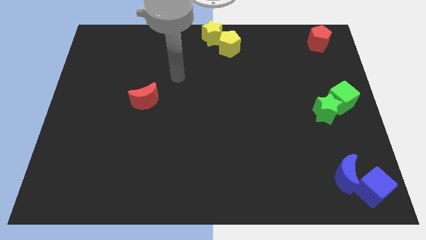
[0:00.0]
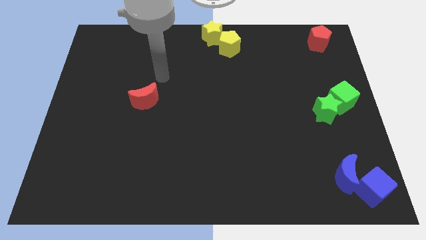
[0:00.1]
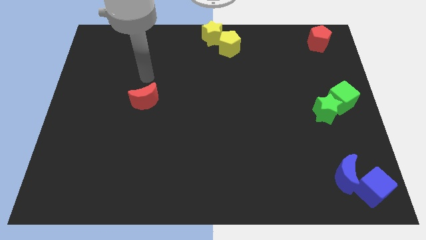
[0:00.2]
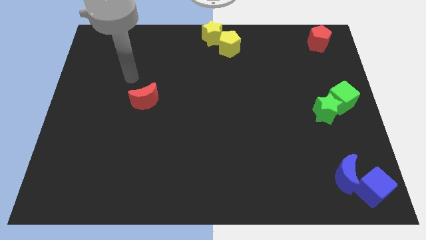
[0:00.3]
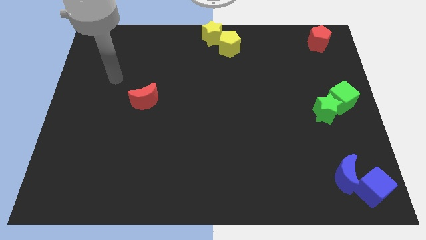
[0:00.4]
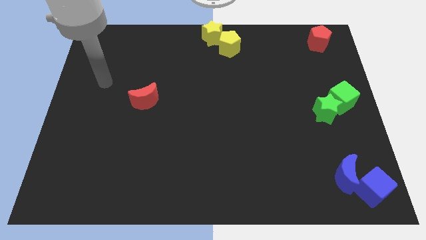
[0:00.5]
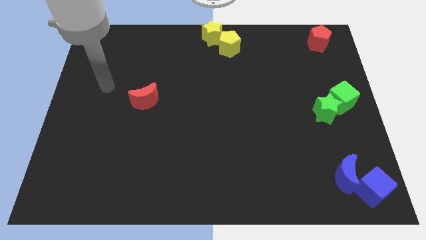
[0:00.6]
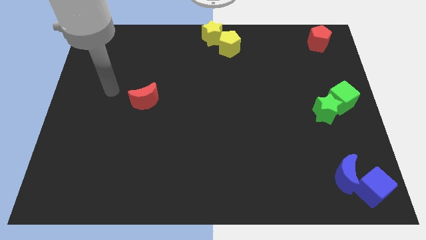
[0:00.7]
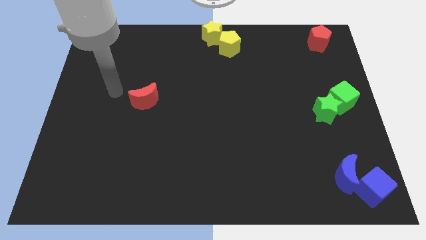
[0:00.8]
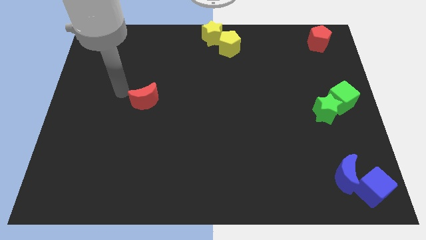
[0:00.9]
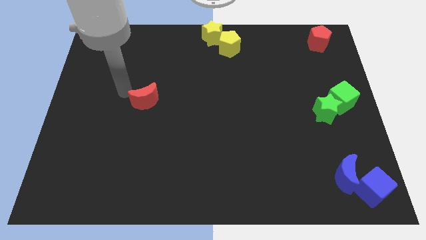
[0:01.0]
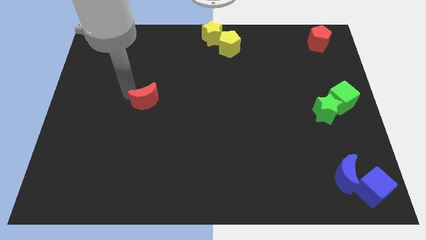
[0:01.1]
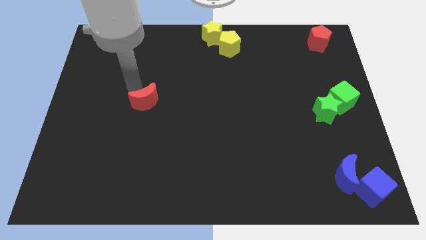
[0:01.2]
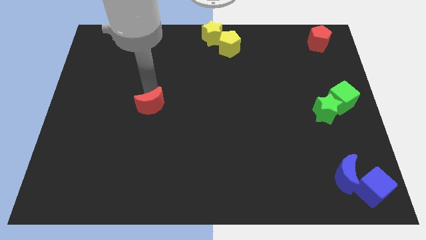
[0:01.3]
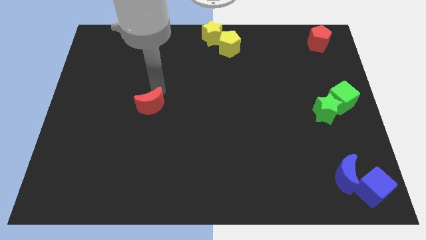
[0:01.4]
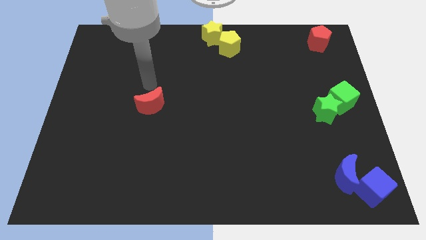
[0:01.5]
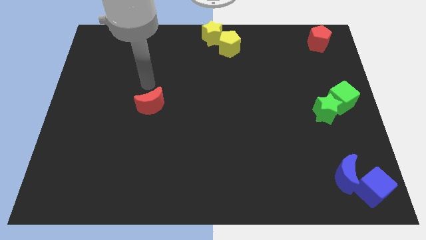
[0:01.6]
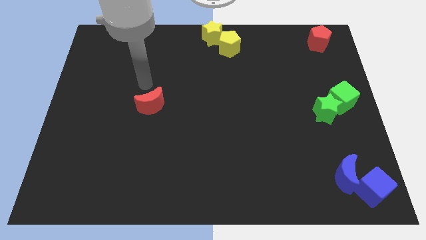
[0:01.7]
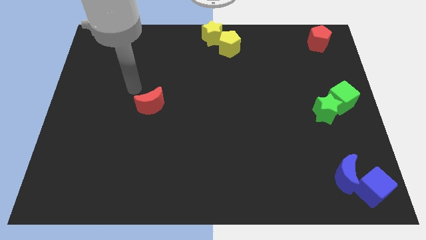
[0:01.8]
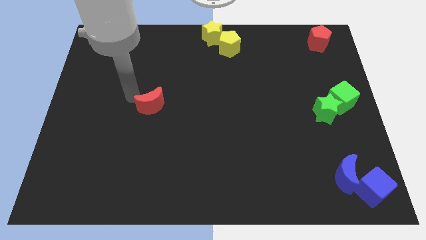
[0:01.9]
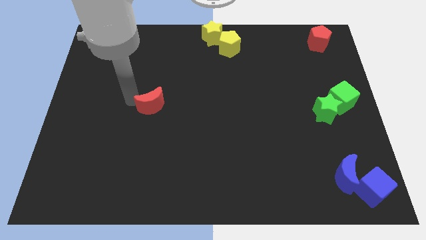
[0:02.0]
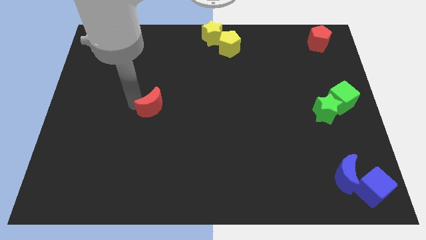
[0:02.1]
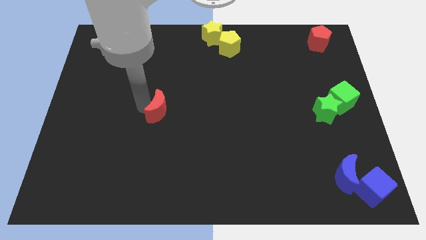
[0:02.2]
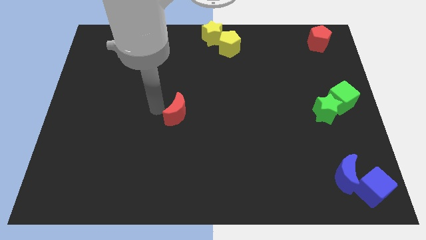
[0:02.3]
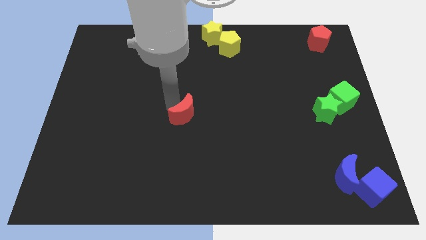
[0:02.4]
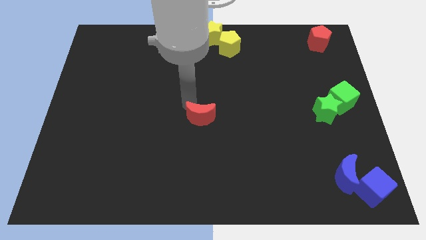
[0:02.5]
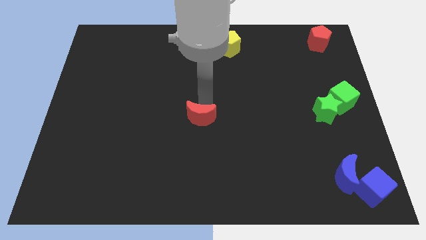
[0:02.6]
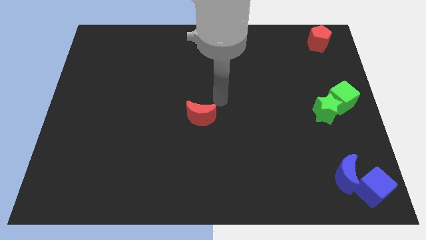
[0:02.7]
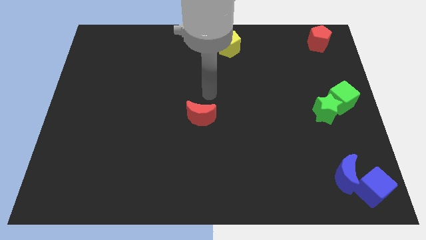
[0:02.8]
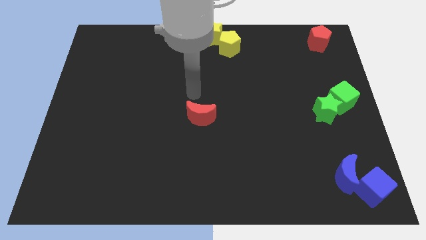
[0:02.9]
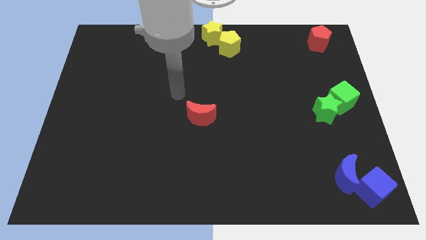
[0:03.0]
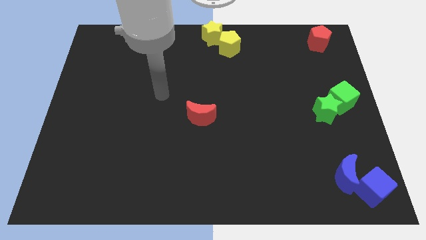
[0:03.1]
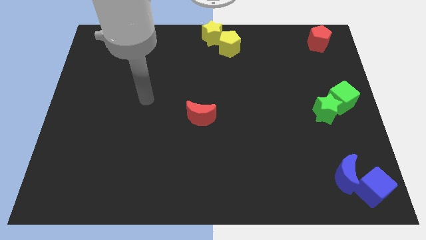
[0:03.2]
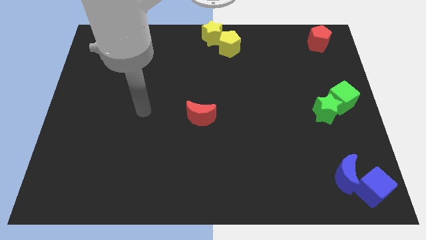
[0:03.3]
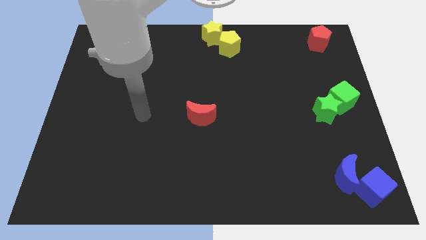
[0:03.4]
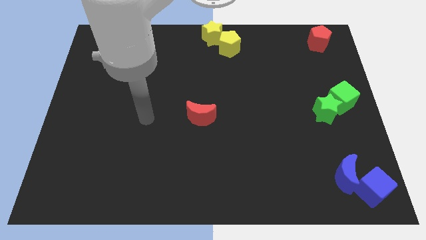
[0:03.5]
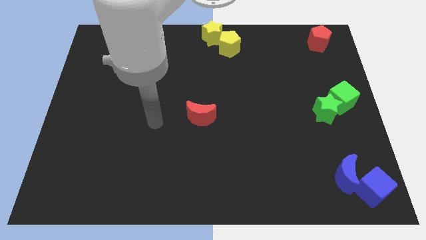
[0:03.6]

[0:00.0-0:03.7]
push the red moon towards the center of the board

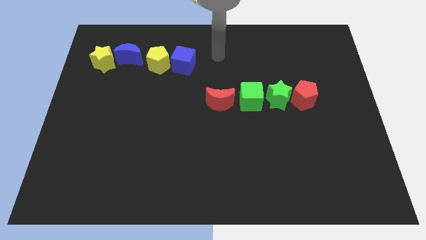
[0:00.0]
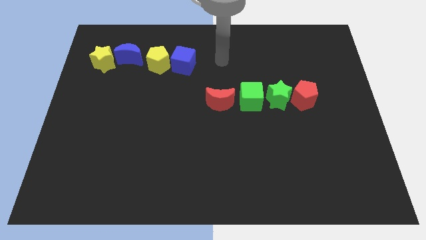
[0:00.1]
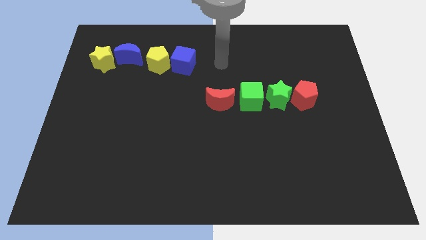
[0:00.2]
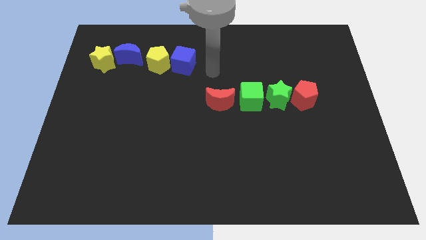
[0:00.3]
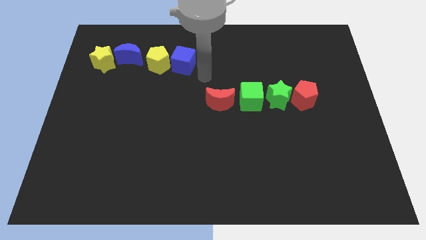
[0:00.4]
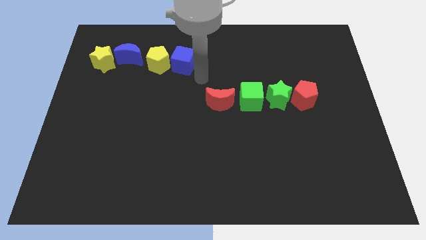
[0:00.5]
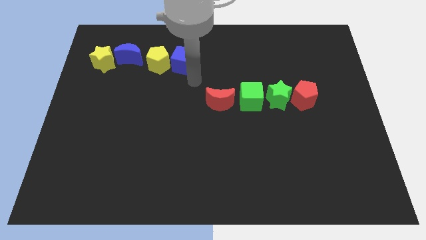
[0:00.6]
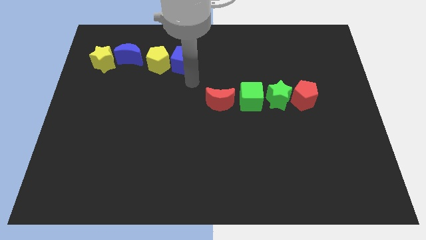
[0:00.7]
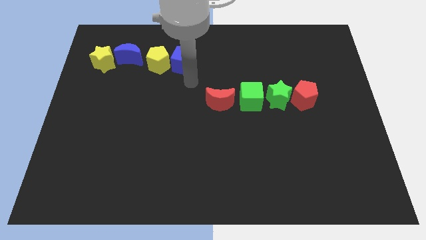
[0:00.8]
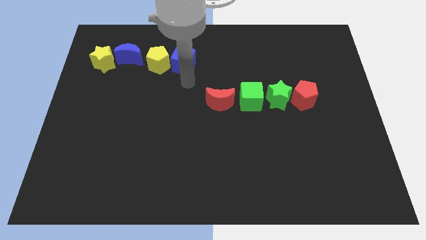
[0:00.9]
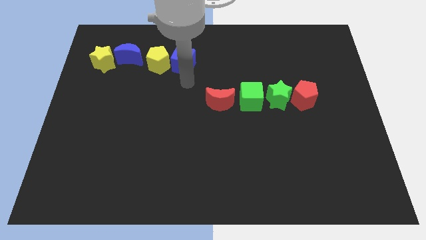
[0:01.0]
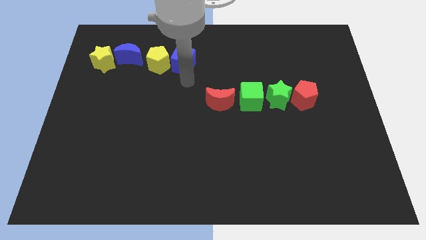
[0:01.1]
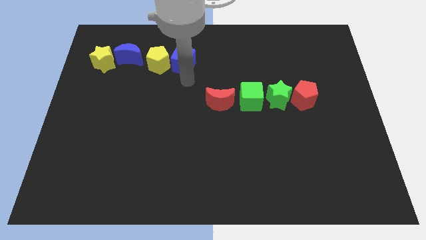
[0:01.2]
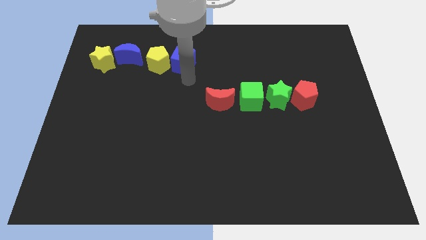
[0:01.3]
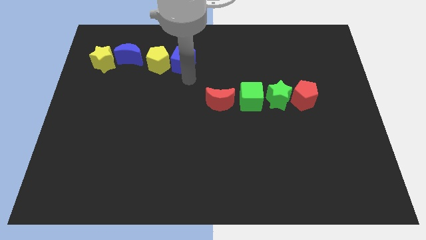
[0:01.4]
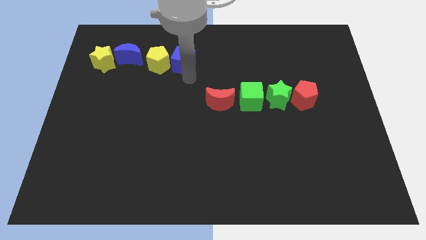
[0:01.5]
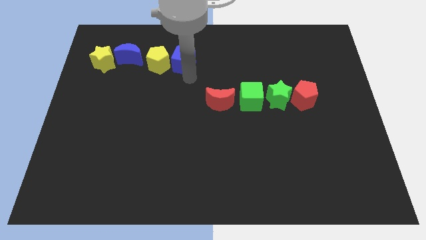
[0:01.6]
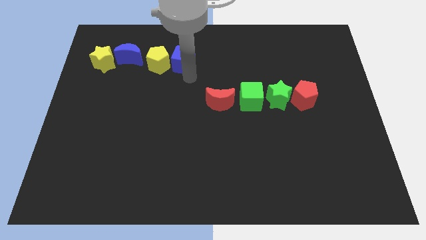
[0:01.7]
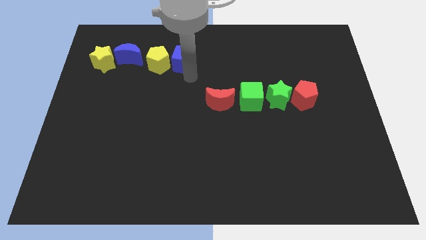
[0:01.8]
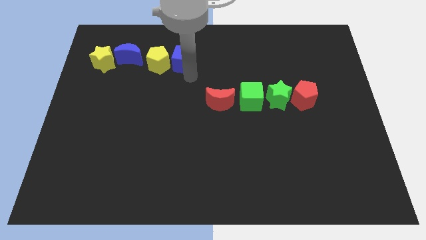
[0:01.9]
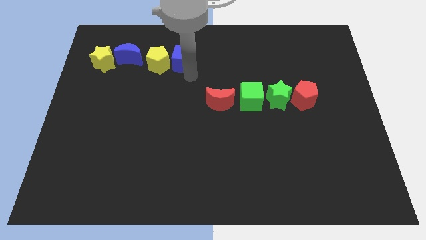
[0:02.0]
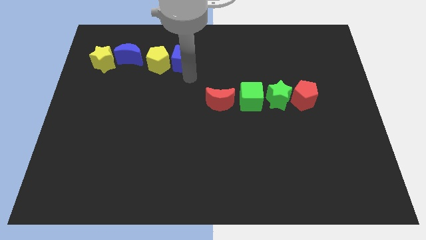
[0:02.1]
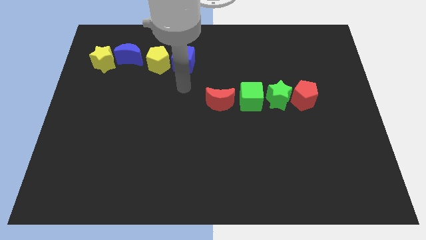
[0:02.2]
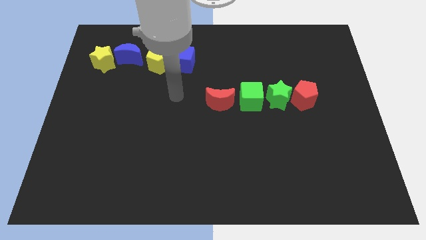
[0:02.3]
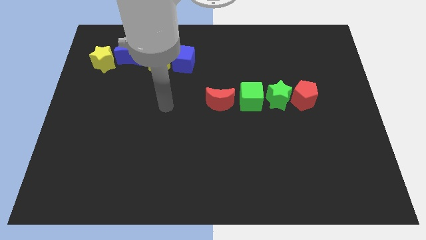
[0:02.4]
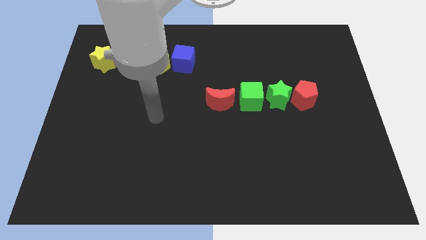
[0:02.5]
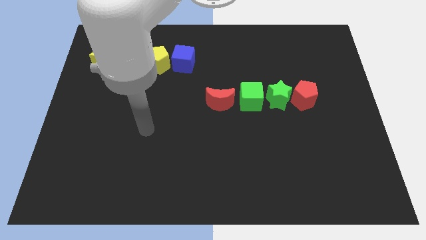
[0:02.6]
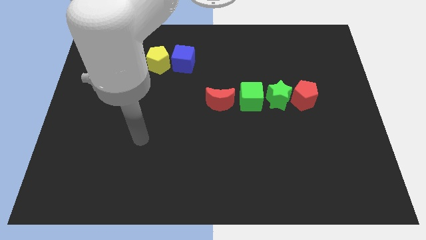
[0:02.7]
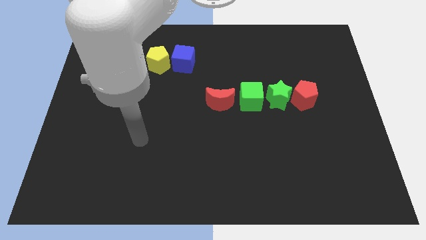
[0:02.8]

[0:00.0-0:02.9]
adjust the blue cube in its original position

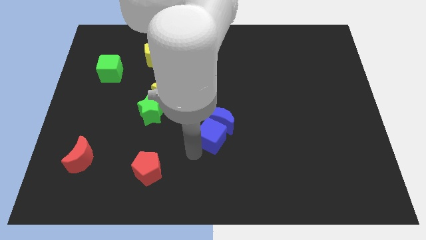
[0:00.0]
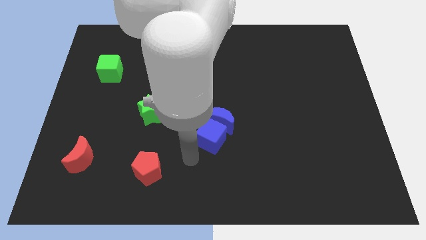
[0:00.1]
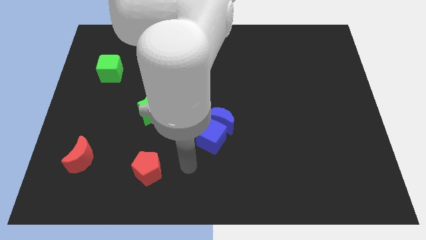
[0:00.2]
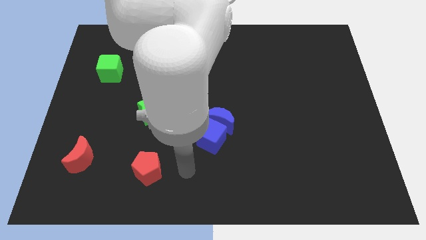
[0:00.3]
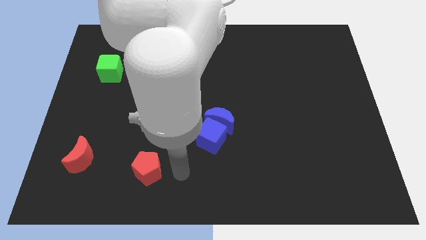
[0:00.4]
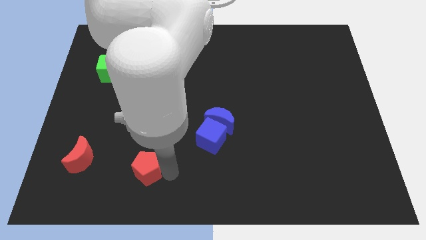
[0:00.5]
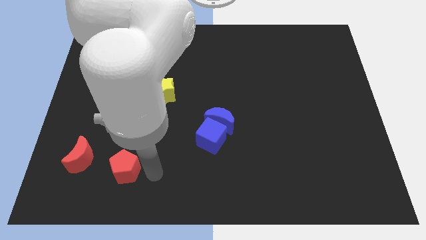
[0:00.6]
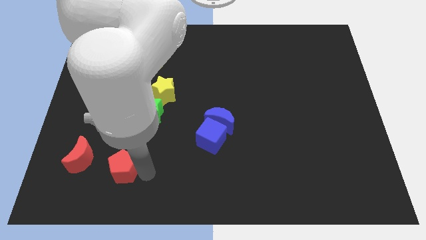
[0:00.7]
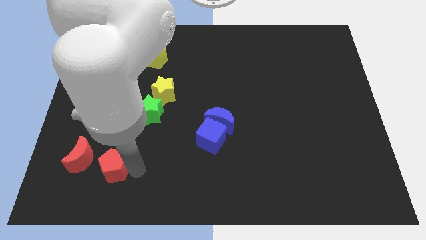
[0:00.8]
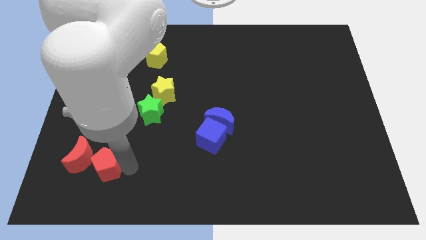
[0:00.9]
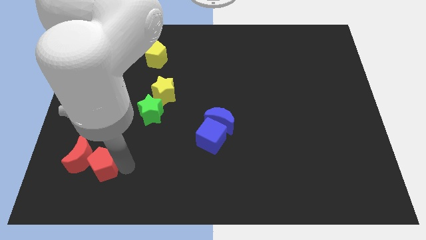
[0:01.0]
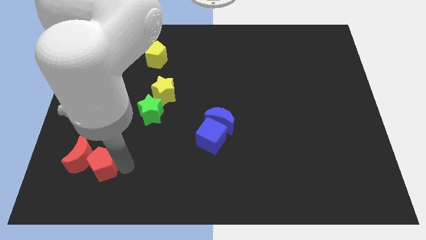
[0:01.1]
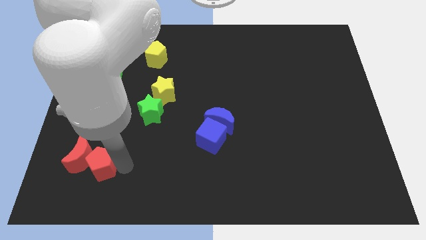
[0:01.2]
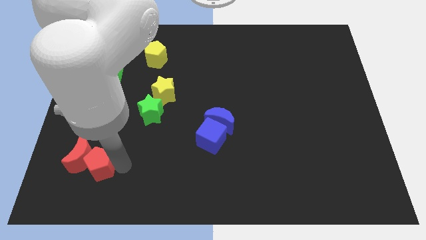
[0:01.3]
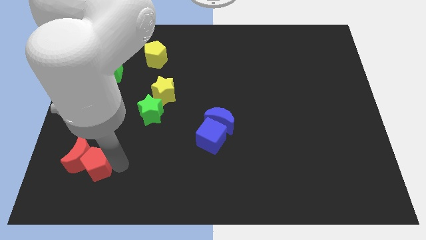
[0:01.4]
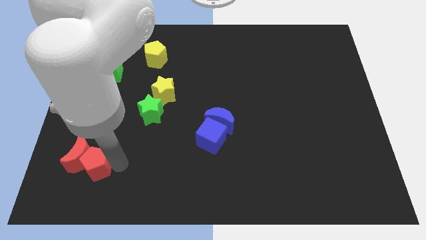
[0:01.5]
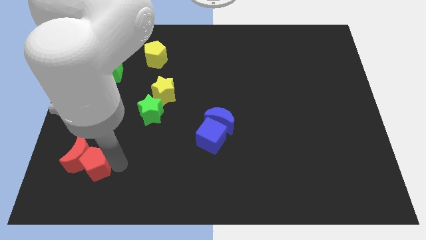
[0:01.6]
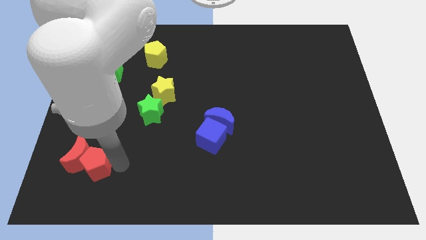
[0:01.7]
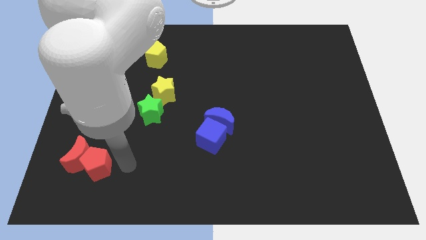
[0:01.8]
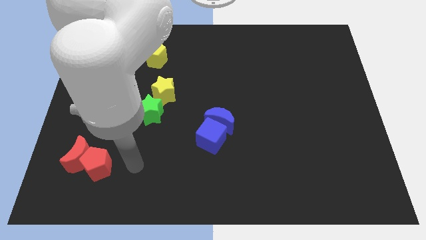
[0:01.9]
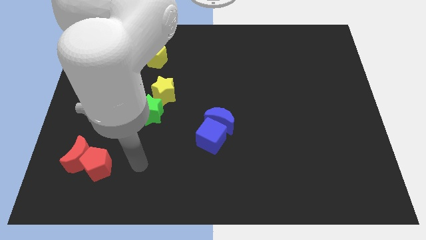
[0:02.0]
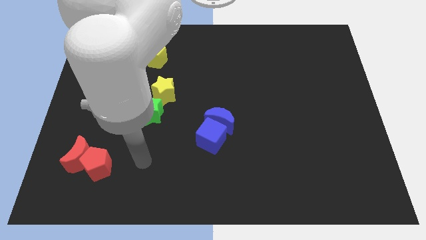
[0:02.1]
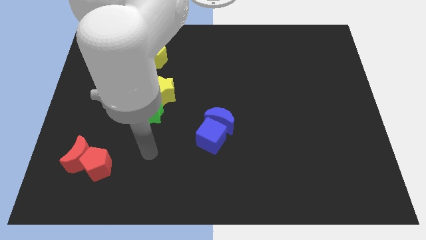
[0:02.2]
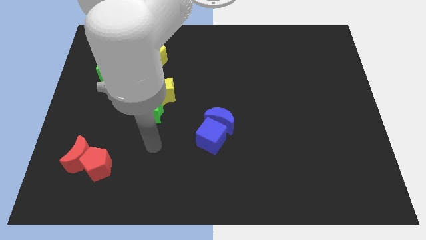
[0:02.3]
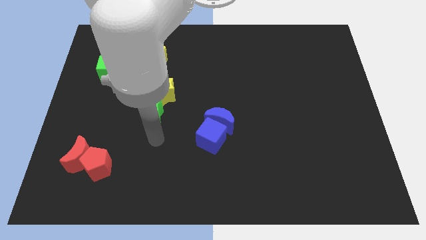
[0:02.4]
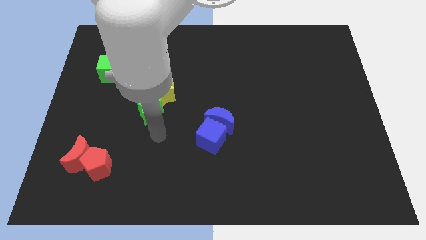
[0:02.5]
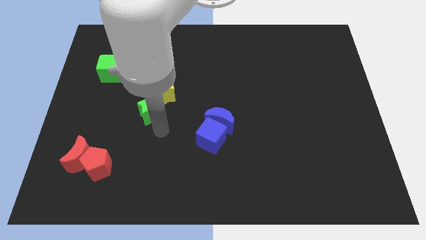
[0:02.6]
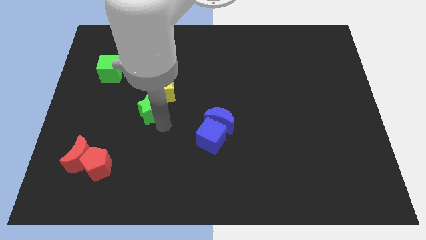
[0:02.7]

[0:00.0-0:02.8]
put the red pentagon into the red crescent
